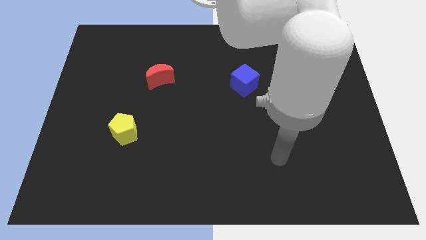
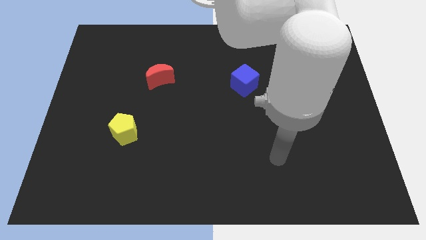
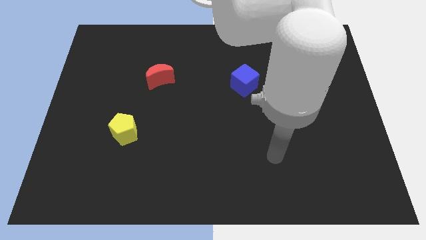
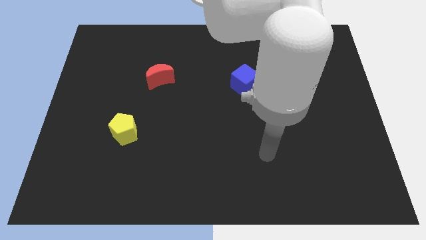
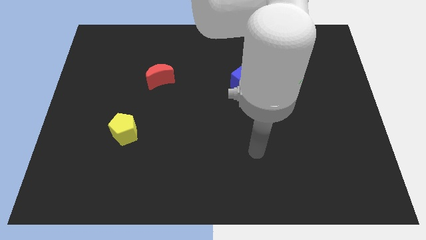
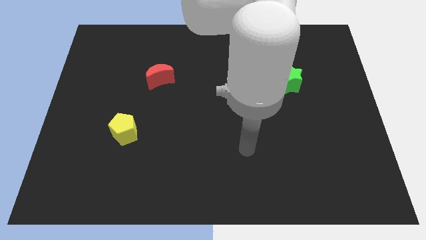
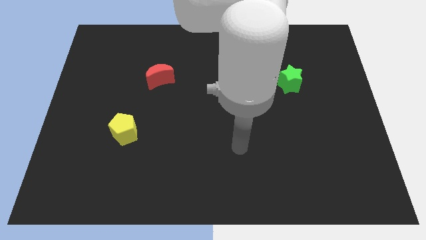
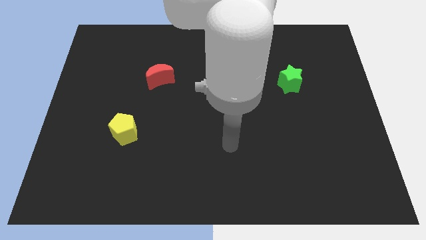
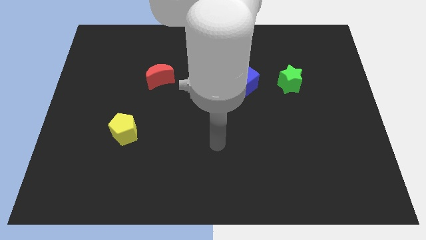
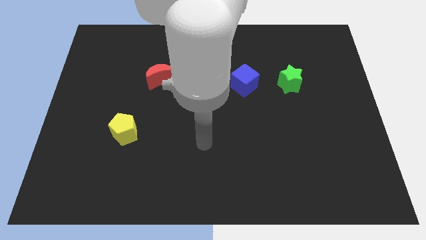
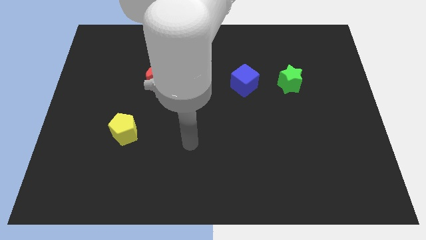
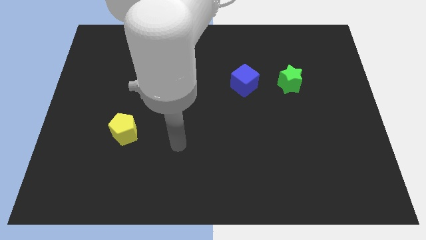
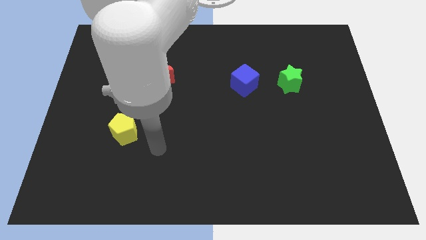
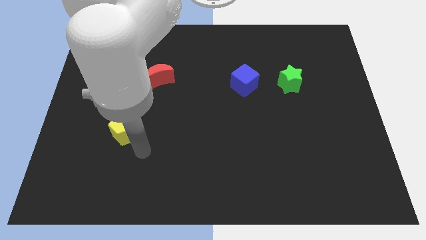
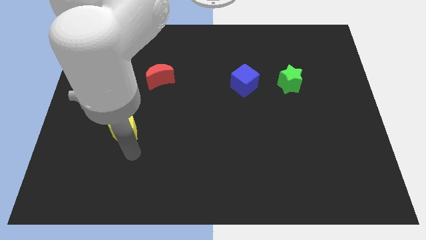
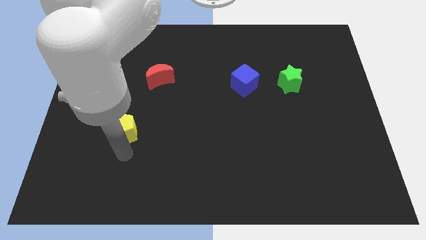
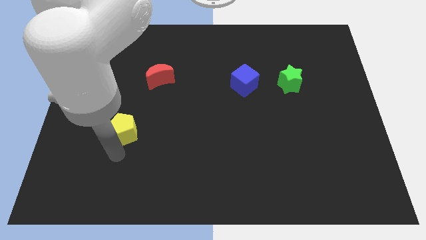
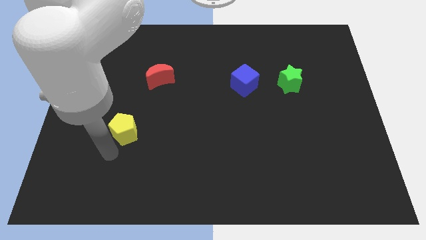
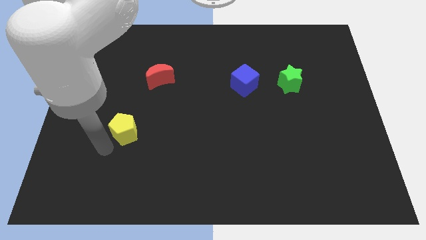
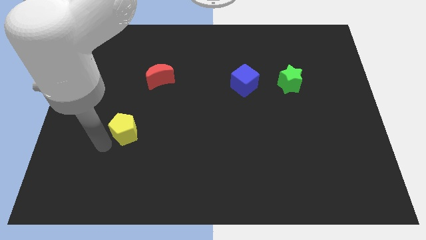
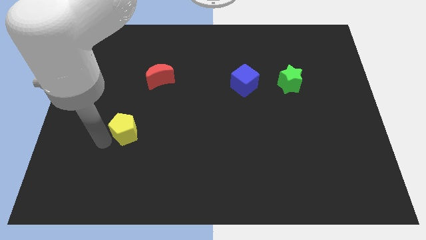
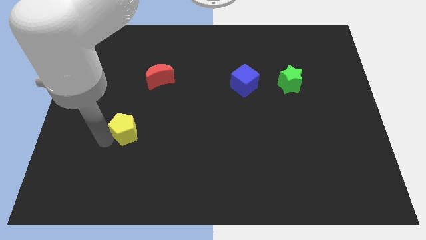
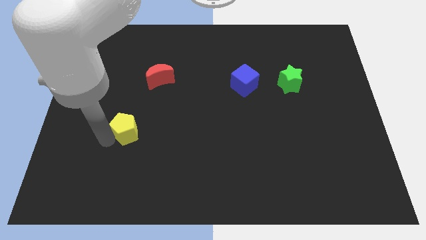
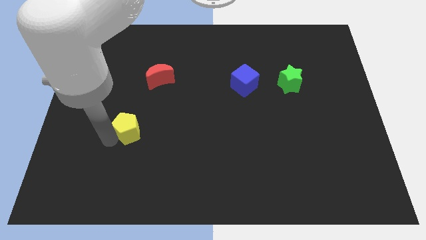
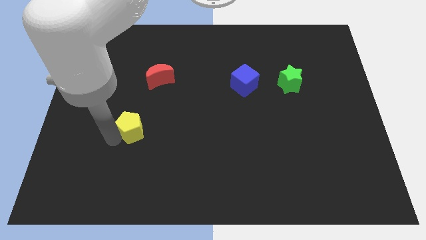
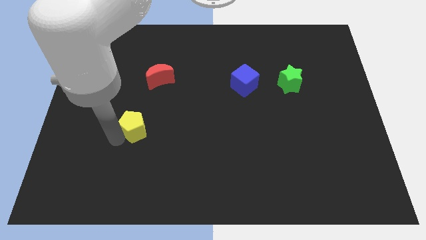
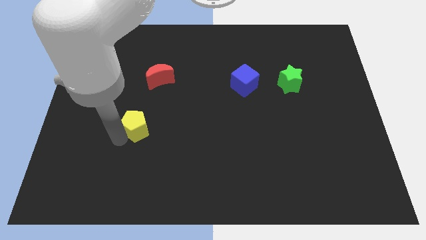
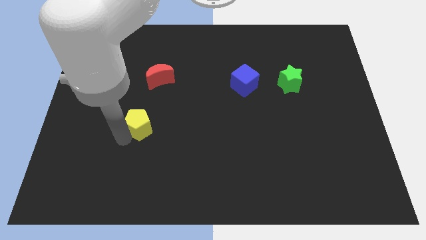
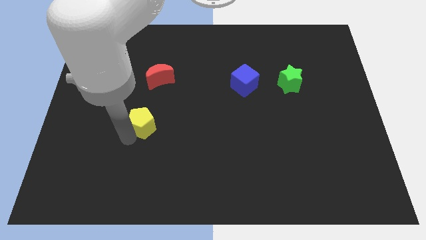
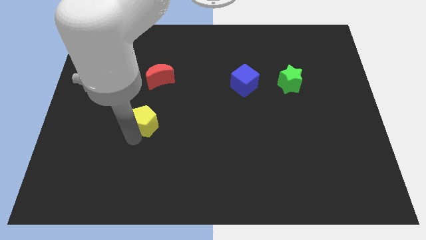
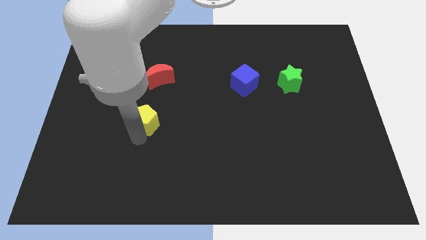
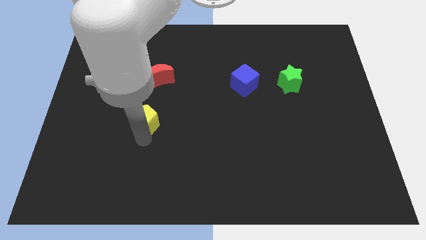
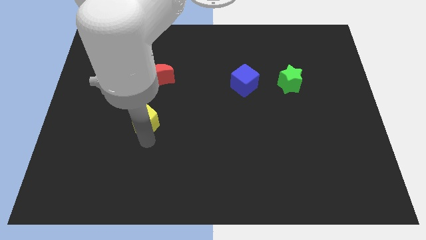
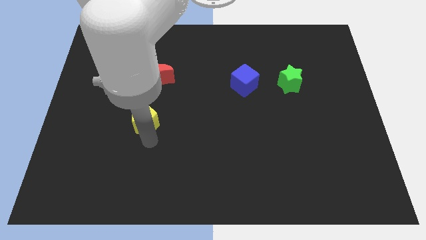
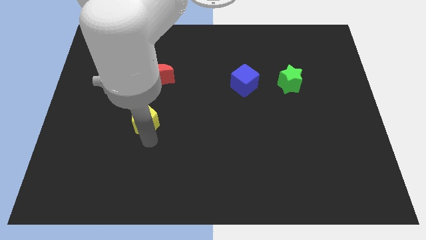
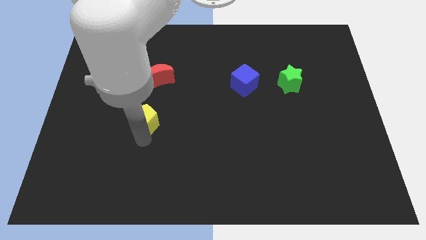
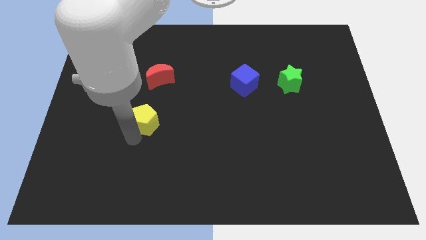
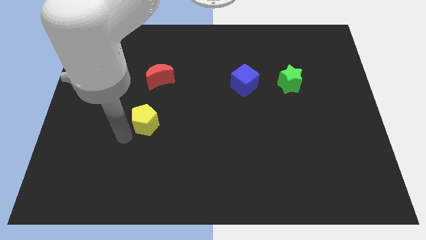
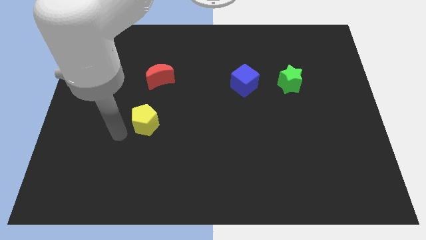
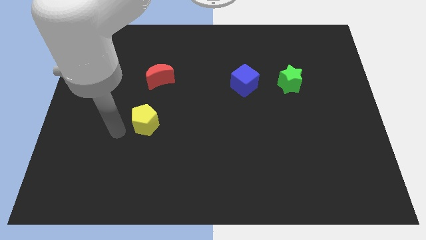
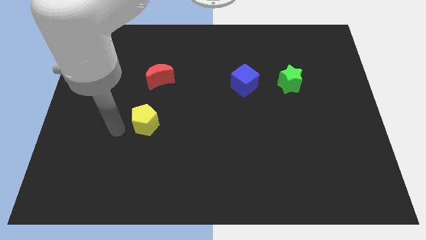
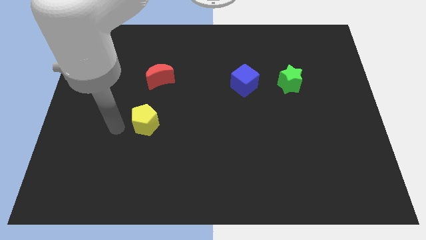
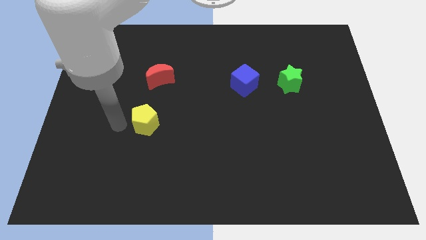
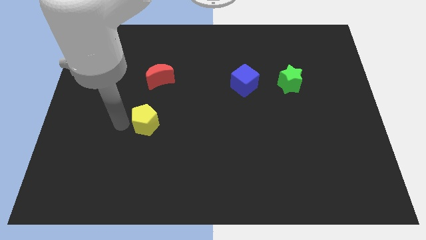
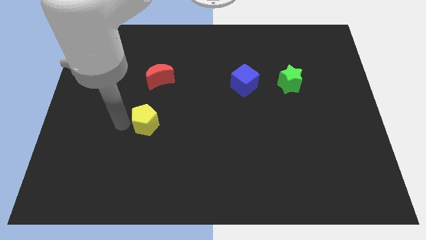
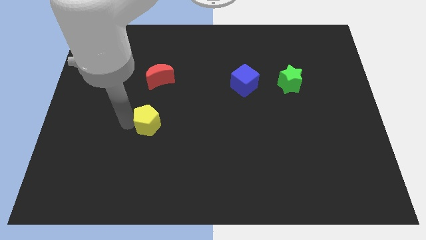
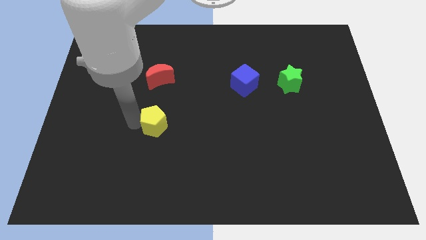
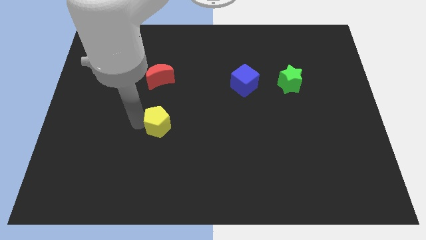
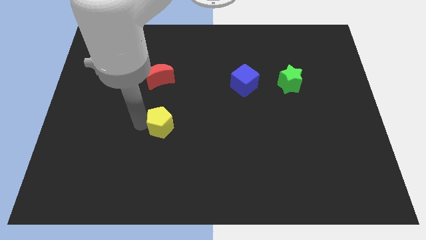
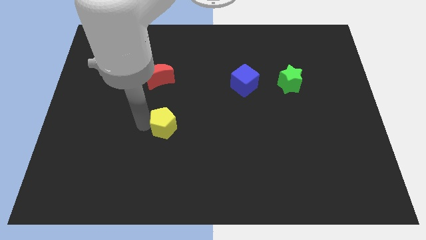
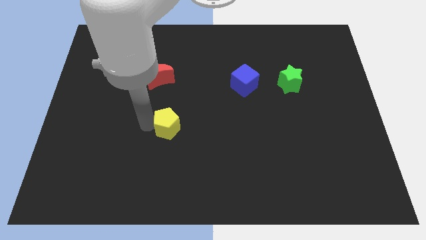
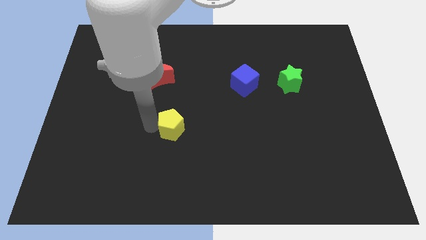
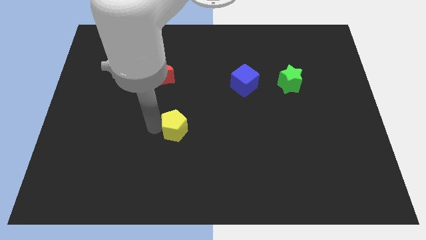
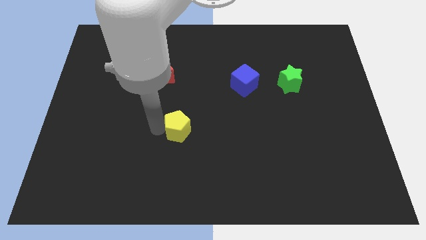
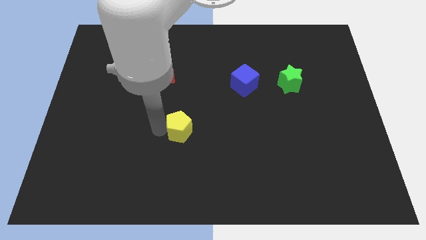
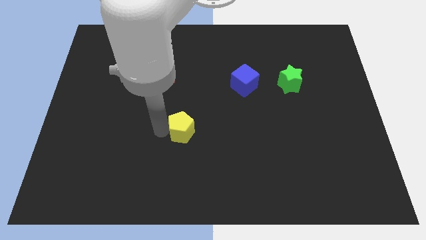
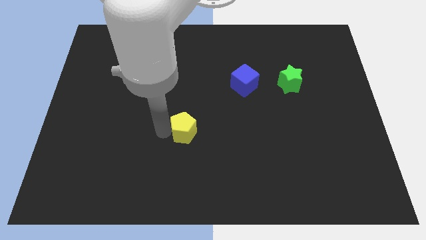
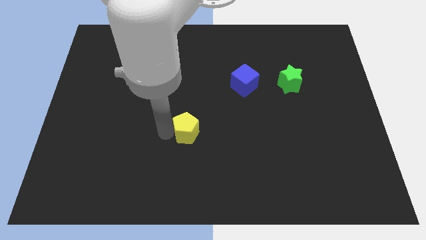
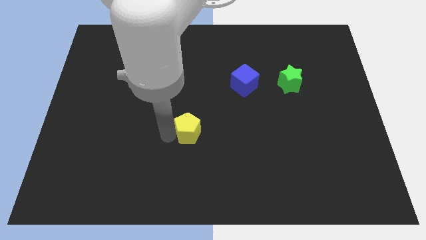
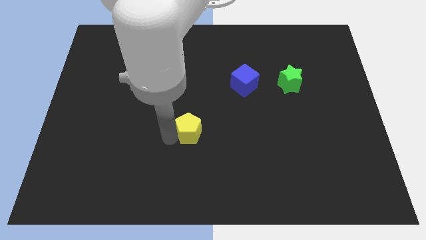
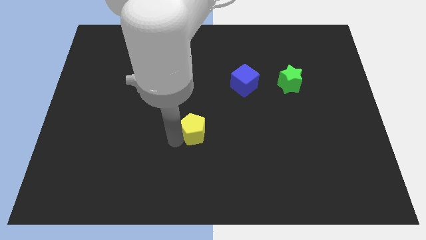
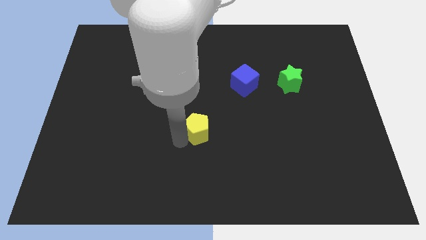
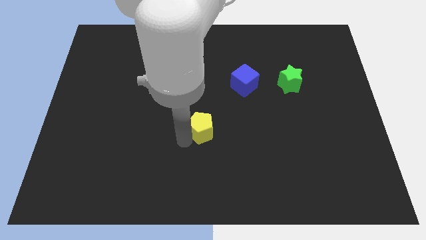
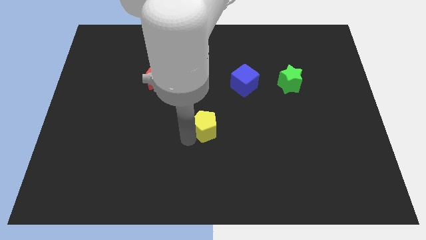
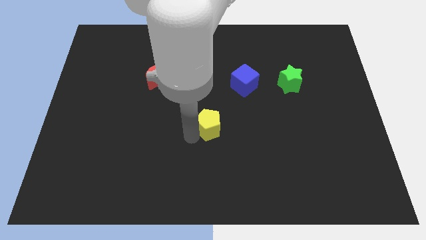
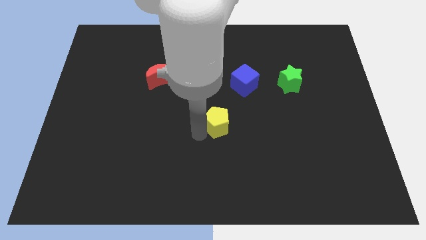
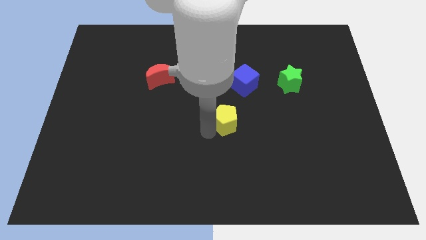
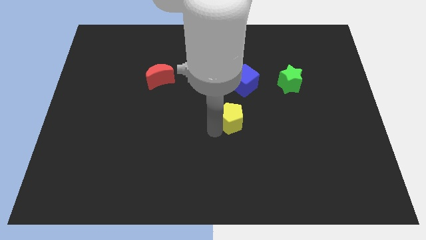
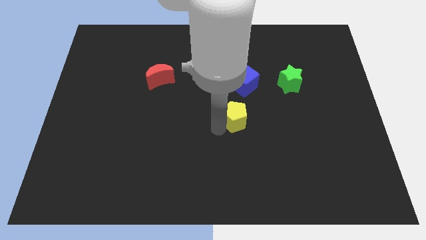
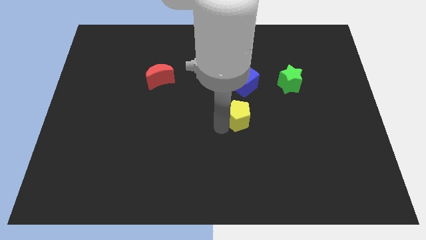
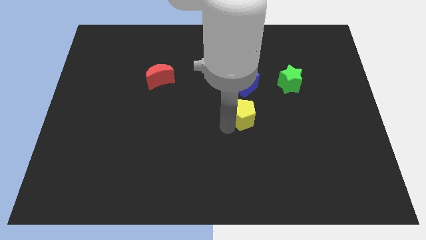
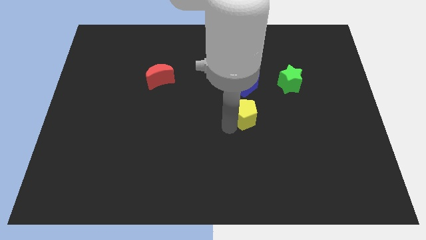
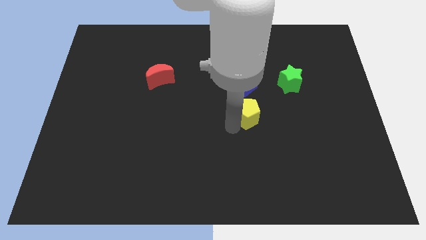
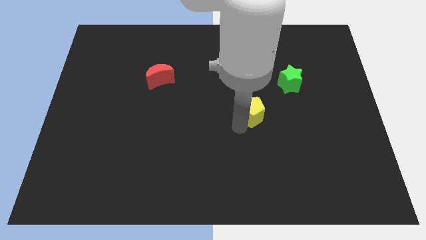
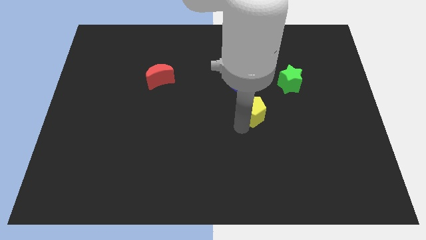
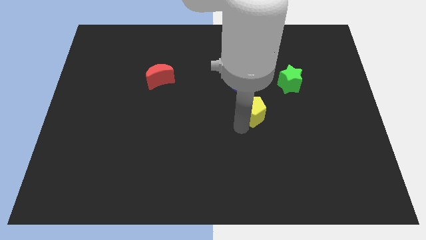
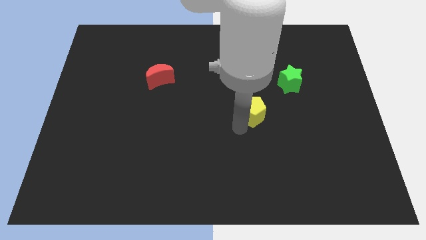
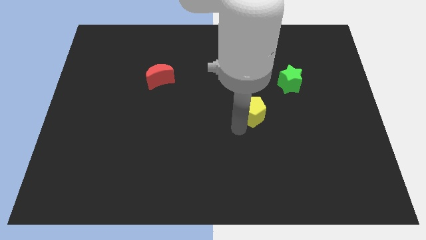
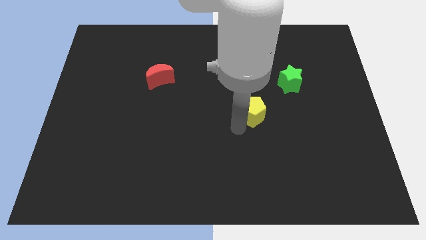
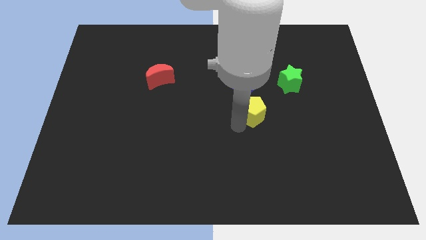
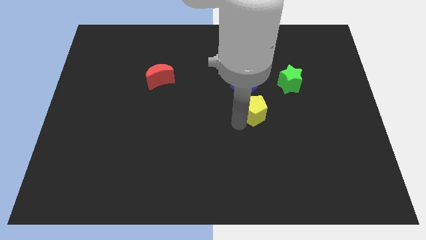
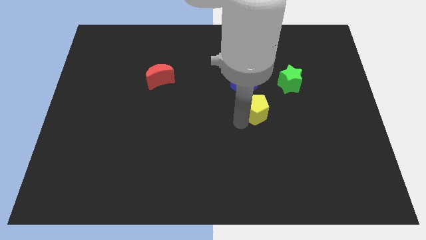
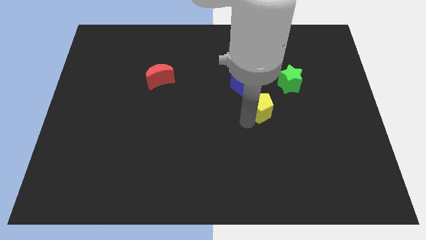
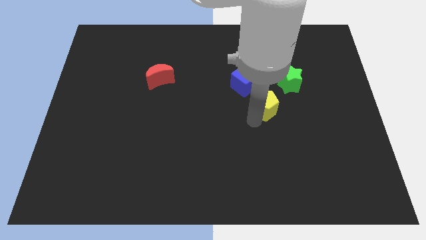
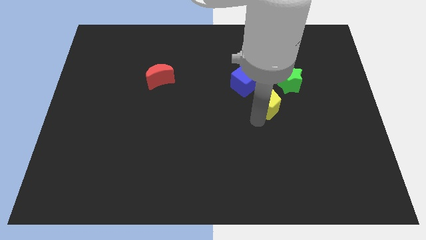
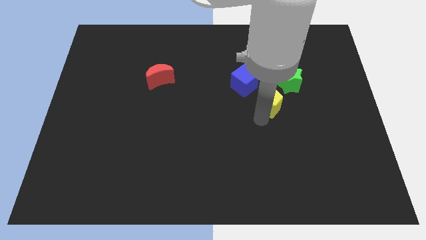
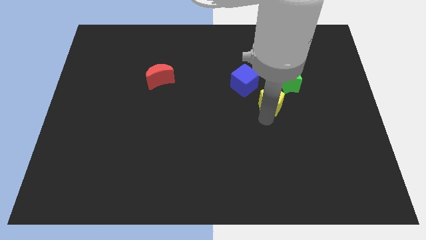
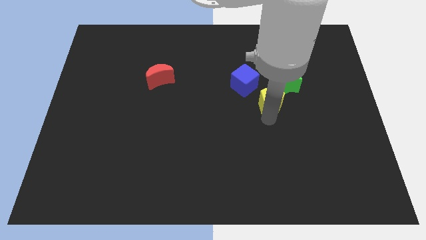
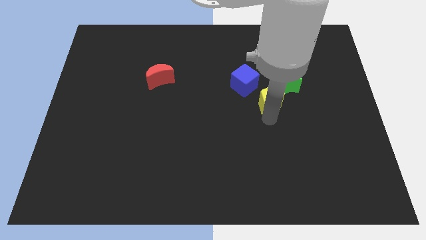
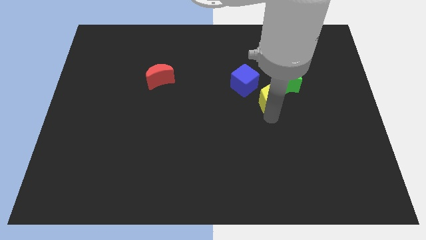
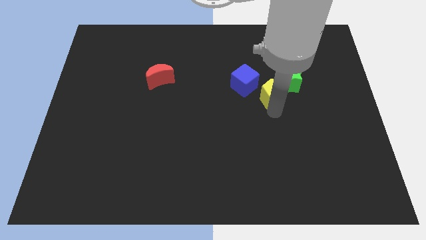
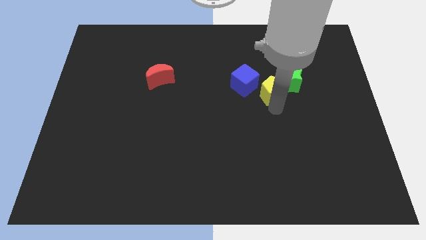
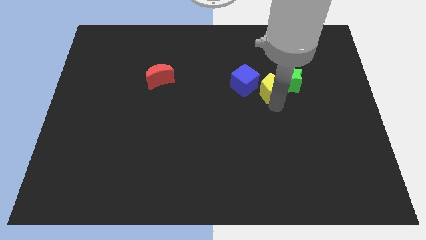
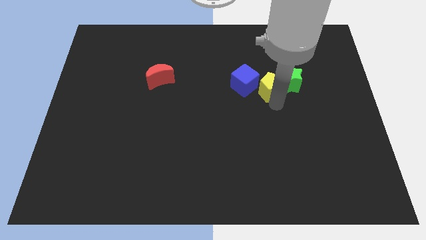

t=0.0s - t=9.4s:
put the yellow pentagon next to the green star
